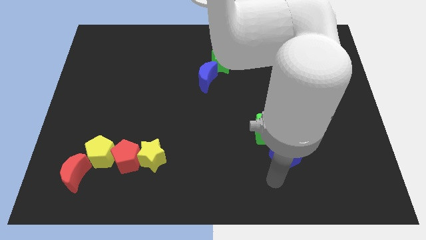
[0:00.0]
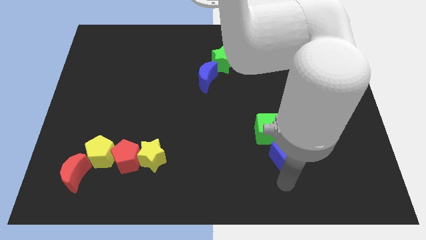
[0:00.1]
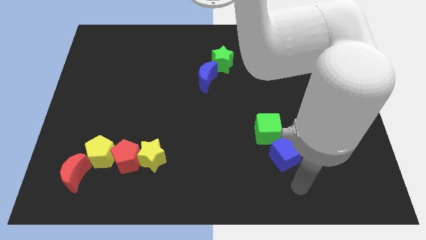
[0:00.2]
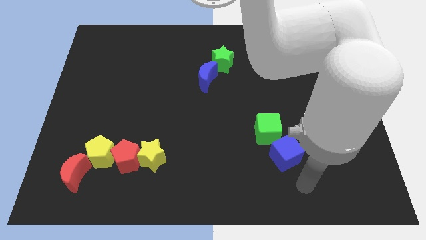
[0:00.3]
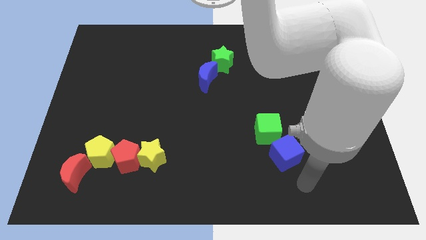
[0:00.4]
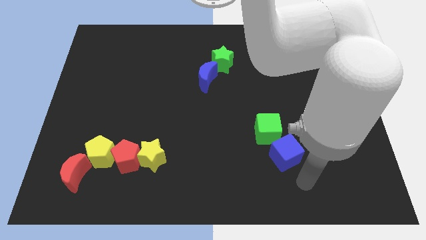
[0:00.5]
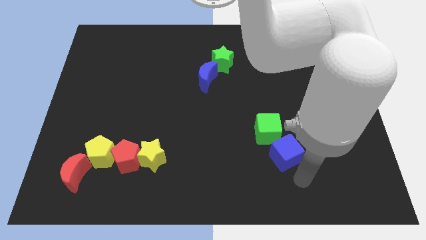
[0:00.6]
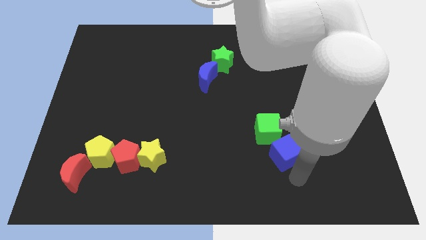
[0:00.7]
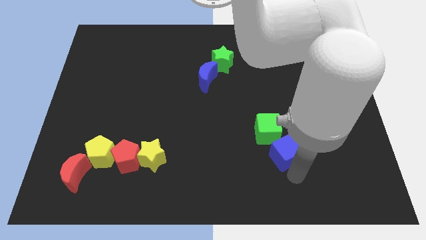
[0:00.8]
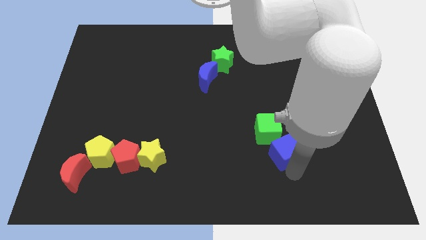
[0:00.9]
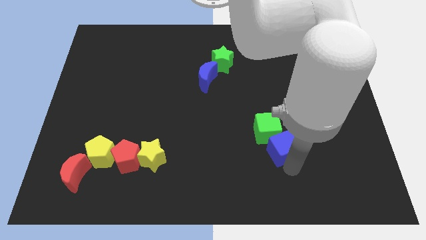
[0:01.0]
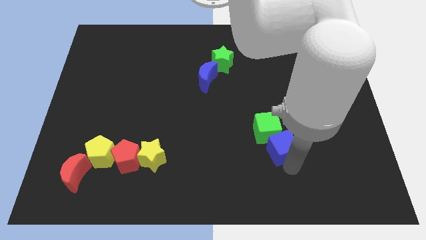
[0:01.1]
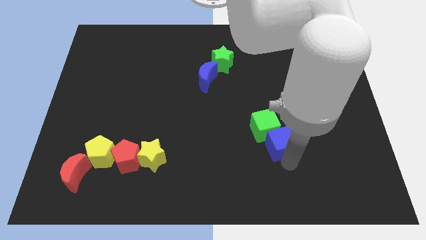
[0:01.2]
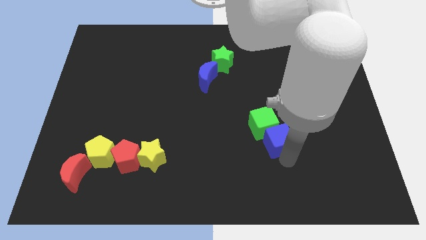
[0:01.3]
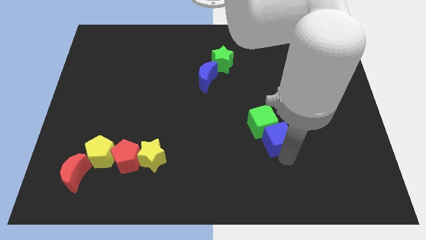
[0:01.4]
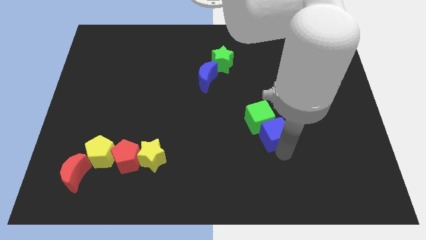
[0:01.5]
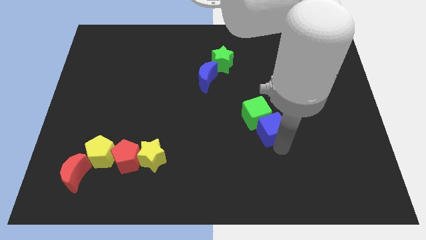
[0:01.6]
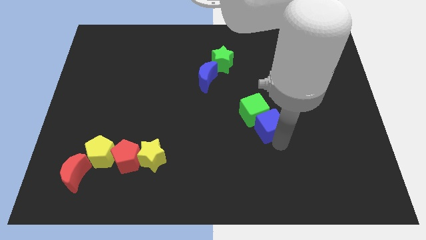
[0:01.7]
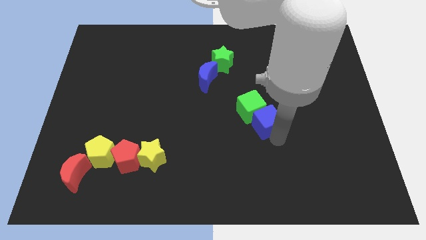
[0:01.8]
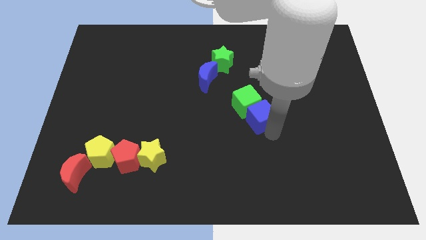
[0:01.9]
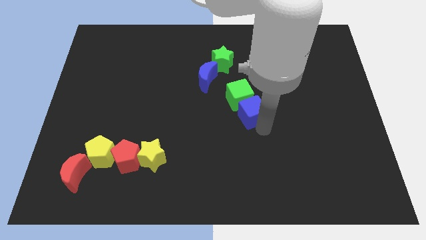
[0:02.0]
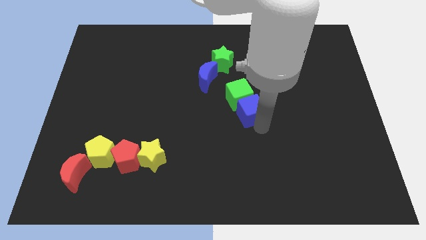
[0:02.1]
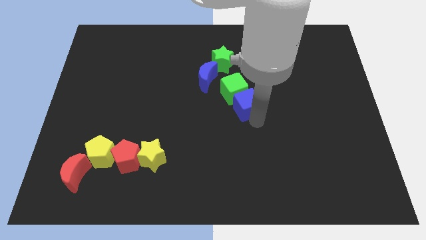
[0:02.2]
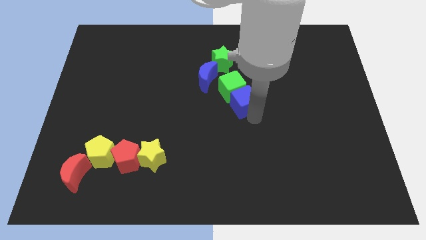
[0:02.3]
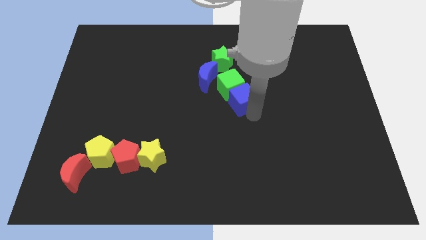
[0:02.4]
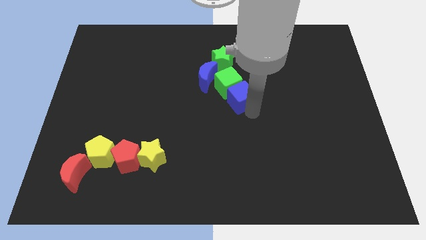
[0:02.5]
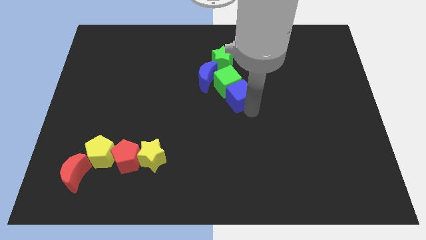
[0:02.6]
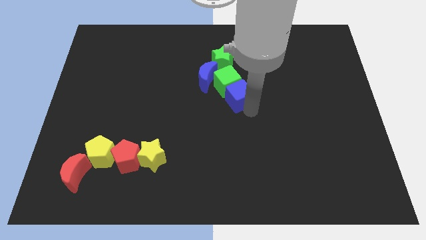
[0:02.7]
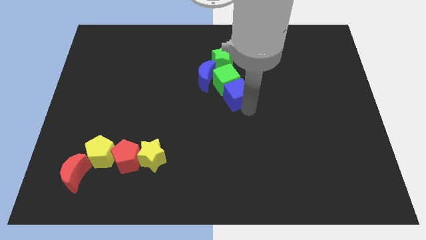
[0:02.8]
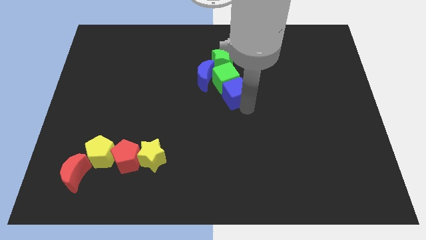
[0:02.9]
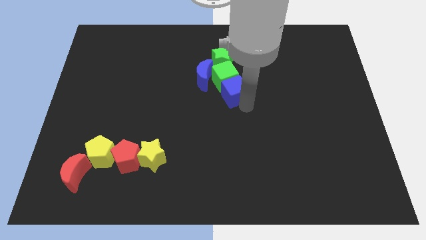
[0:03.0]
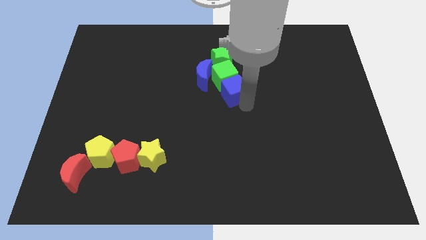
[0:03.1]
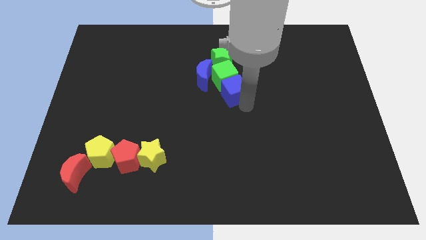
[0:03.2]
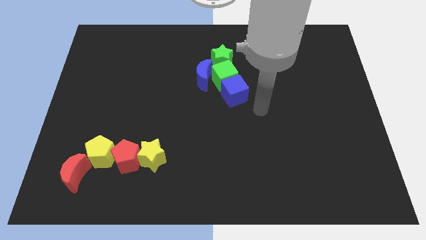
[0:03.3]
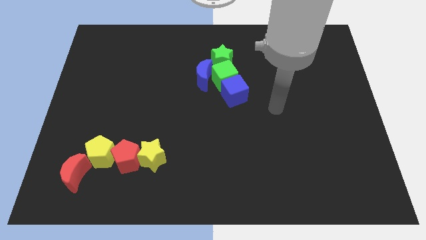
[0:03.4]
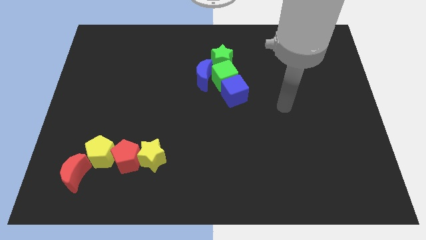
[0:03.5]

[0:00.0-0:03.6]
push the blue cube and green cube at the bottom of the green star

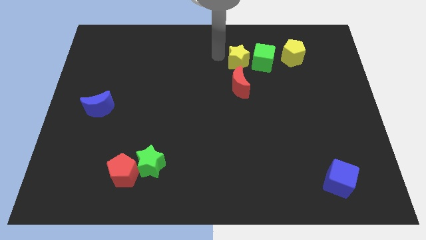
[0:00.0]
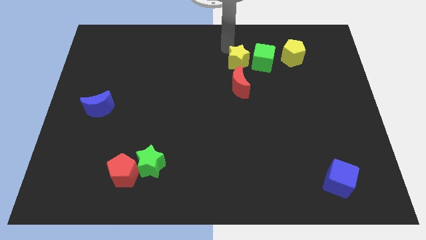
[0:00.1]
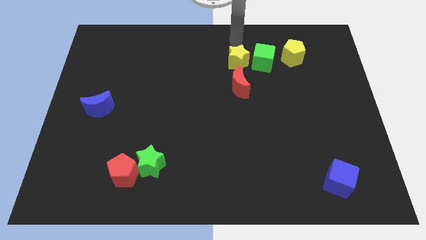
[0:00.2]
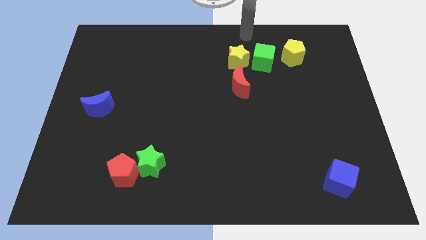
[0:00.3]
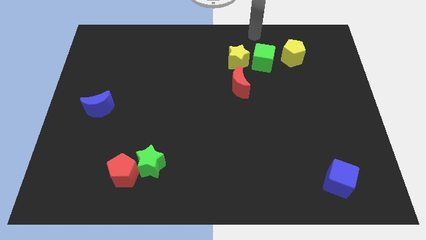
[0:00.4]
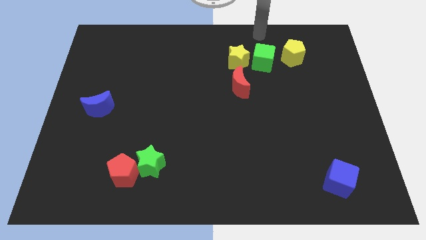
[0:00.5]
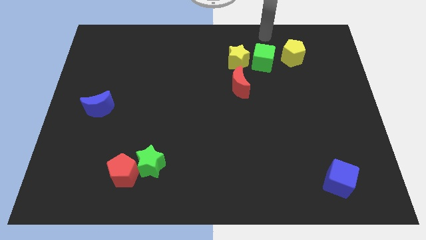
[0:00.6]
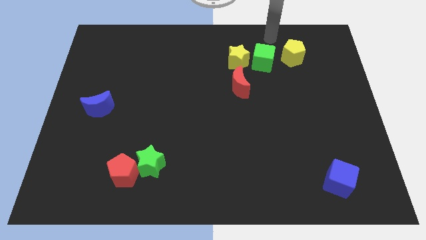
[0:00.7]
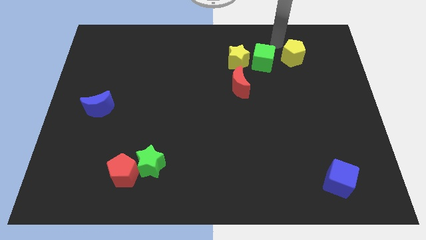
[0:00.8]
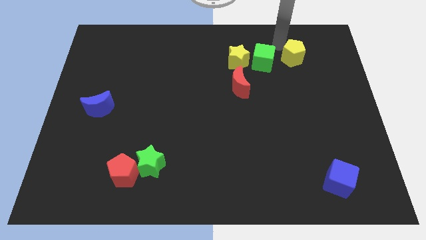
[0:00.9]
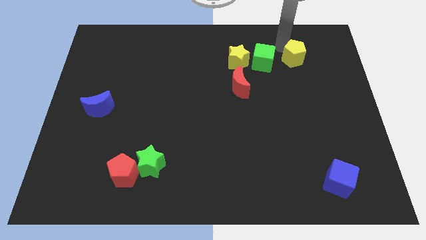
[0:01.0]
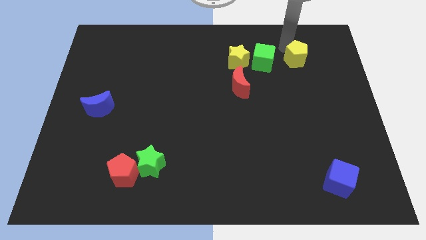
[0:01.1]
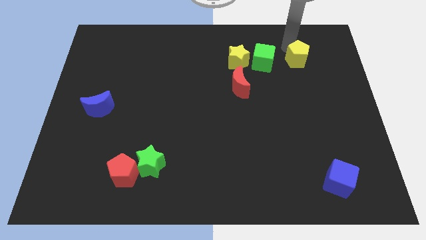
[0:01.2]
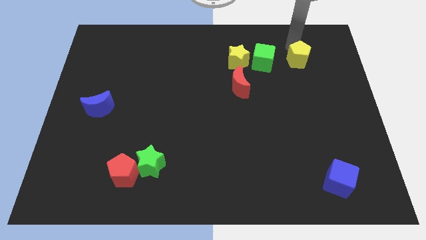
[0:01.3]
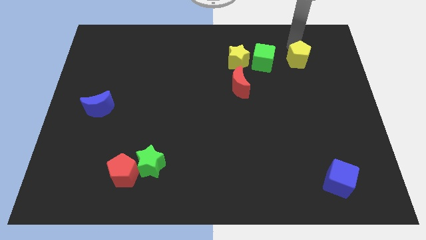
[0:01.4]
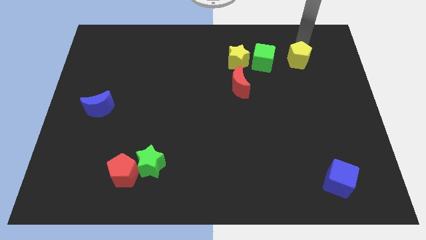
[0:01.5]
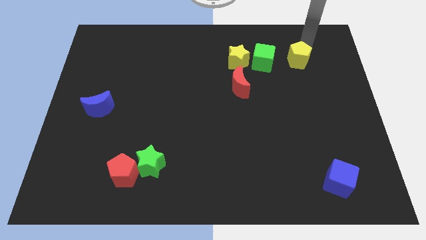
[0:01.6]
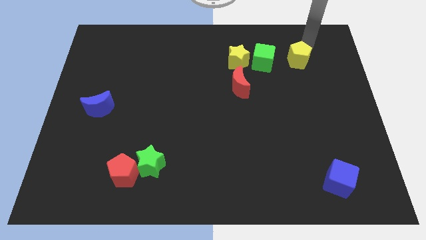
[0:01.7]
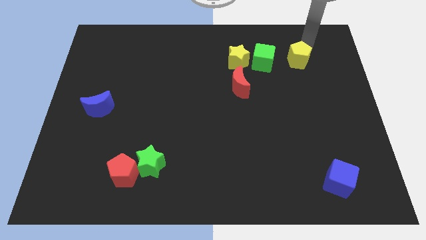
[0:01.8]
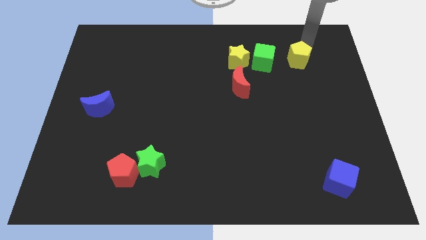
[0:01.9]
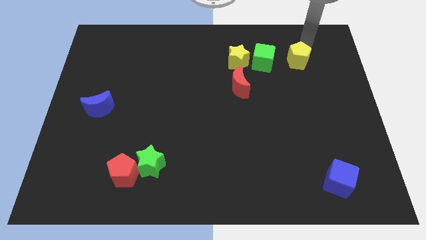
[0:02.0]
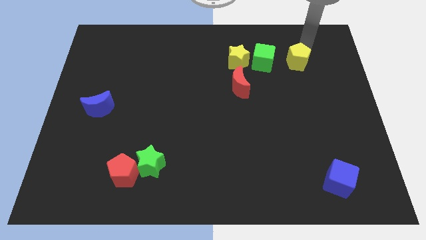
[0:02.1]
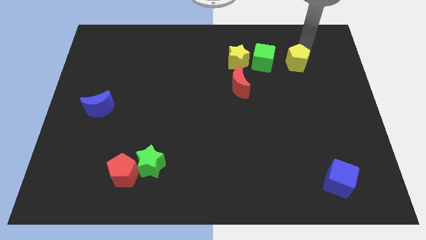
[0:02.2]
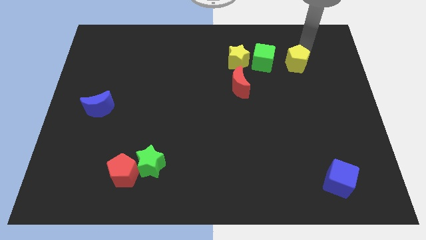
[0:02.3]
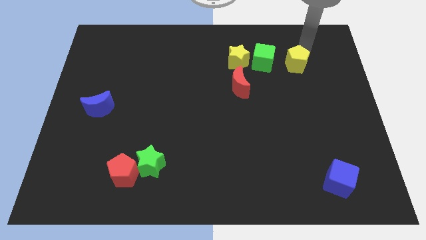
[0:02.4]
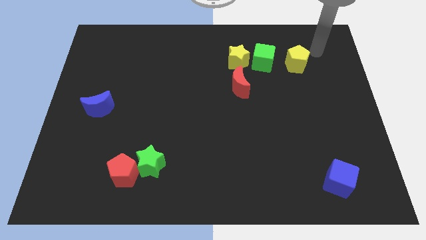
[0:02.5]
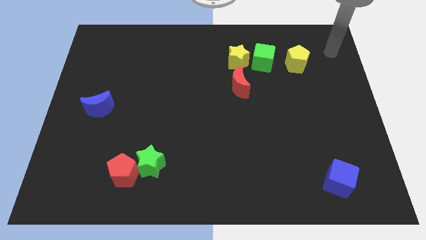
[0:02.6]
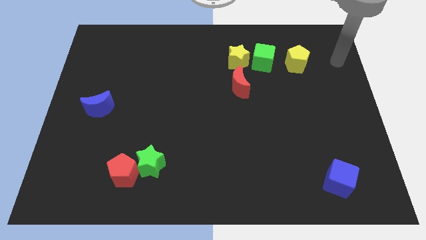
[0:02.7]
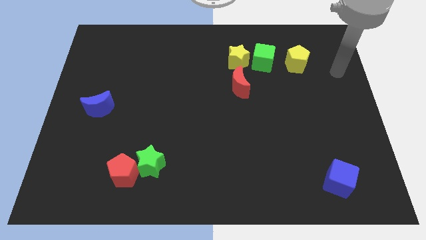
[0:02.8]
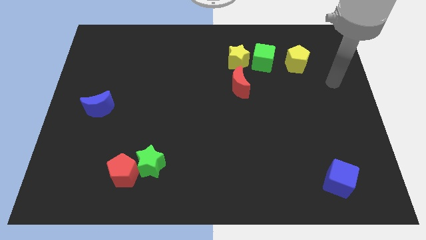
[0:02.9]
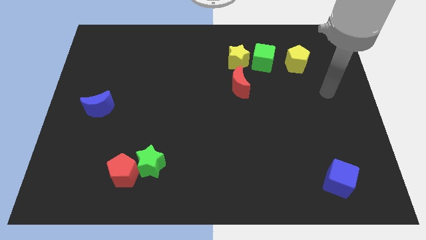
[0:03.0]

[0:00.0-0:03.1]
move the yellow pentagon horizontally to the right side of the green cube

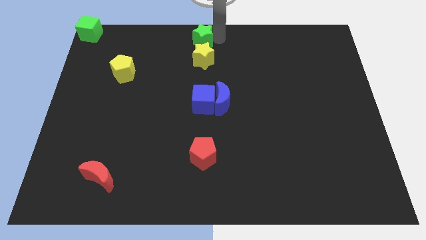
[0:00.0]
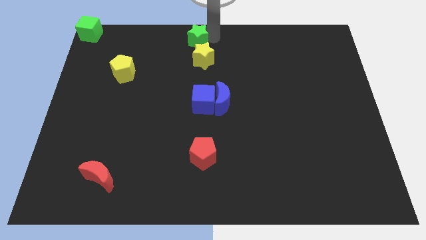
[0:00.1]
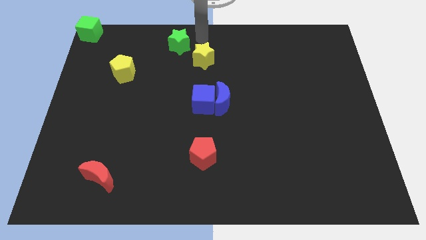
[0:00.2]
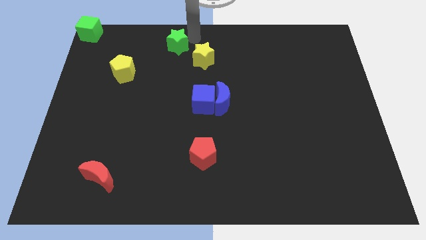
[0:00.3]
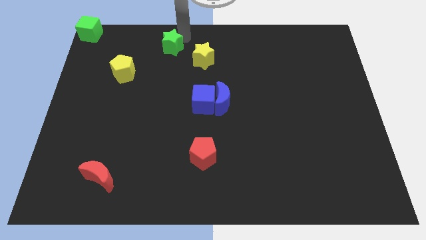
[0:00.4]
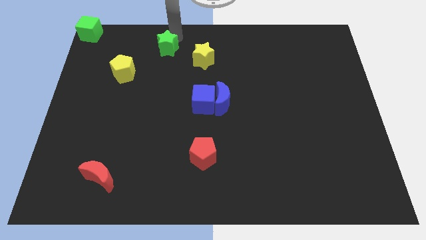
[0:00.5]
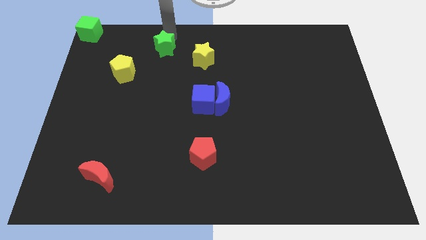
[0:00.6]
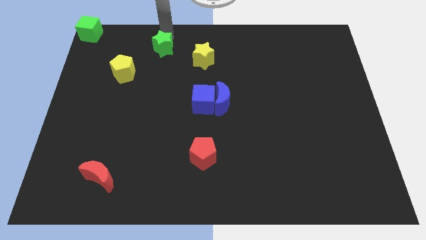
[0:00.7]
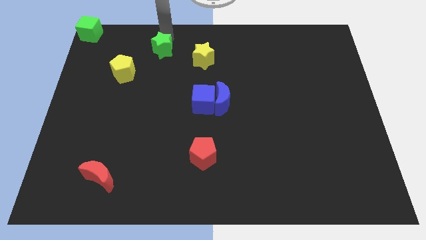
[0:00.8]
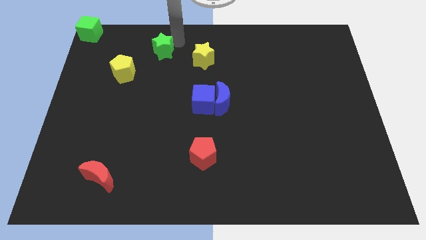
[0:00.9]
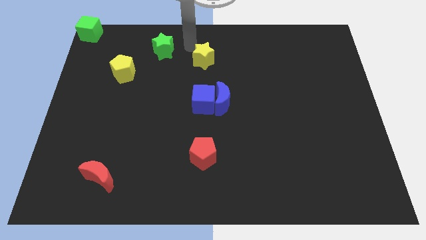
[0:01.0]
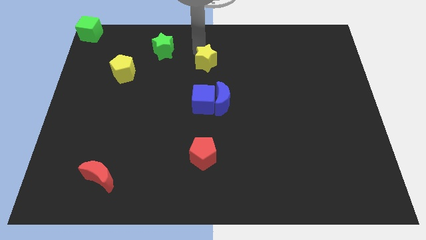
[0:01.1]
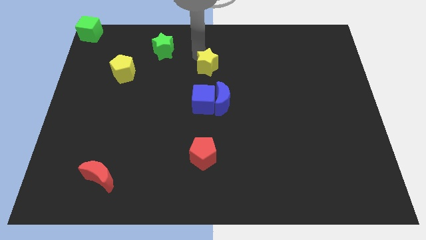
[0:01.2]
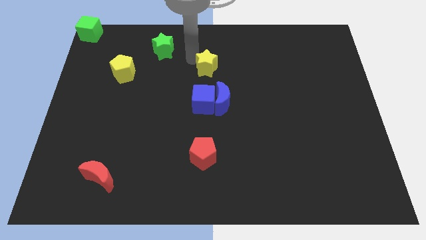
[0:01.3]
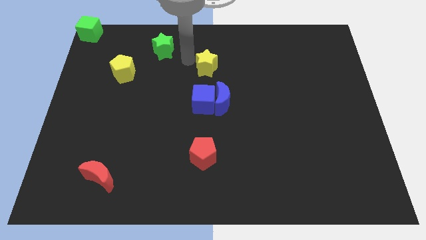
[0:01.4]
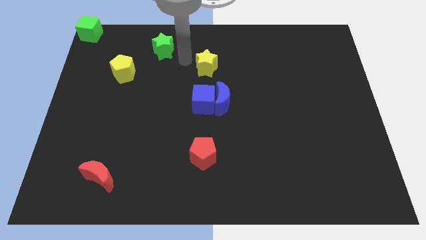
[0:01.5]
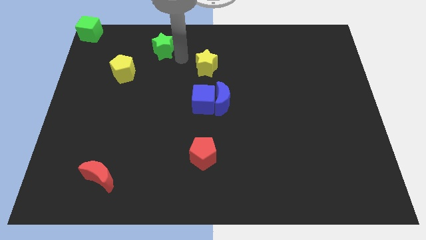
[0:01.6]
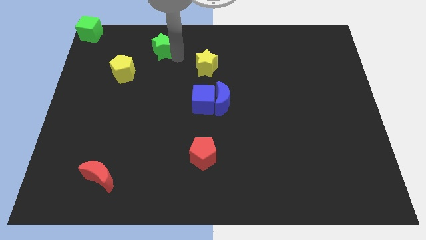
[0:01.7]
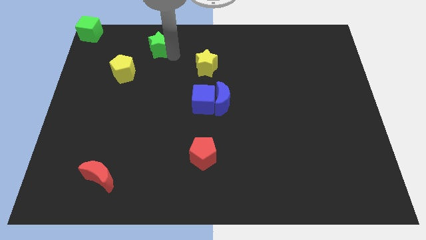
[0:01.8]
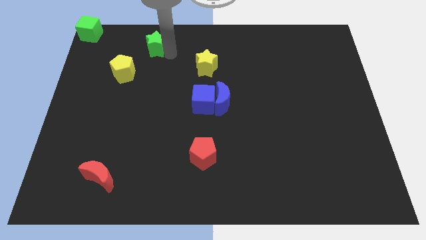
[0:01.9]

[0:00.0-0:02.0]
slide the green star to the left side of the board

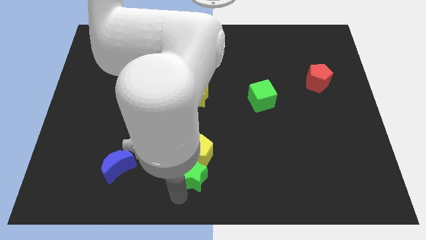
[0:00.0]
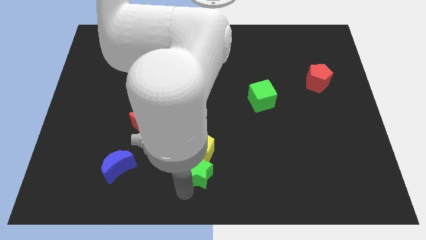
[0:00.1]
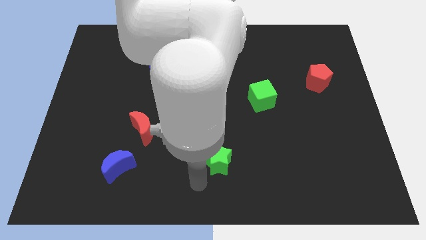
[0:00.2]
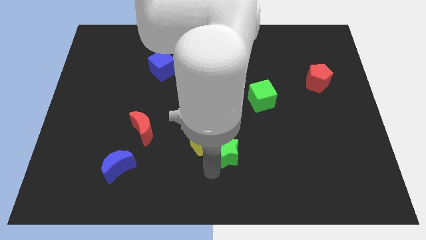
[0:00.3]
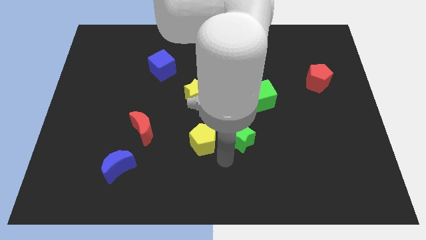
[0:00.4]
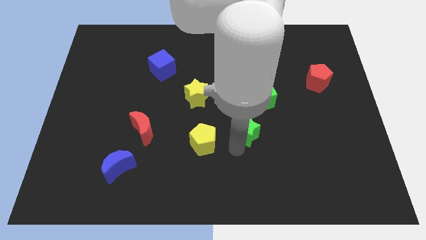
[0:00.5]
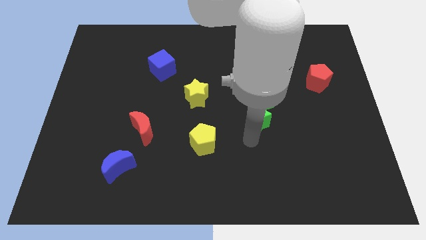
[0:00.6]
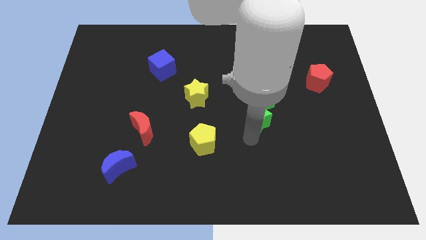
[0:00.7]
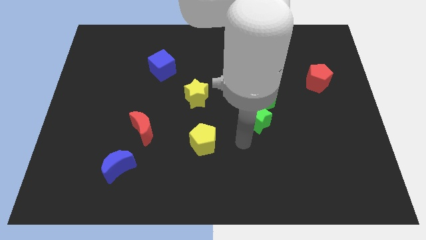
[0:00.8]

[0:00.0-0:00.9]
place the green star at the bottom of the green cube
